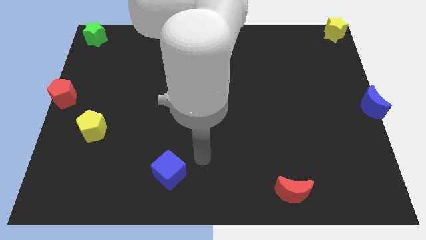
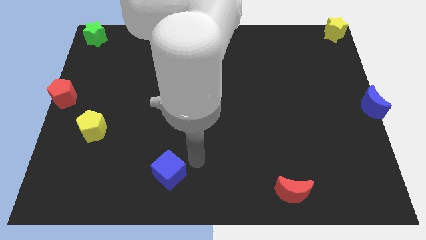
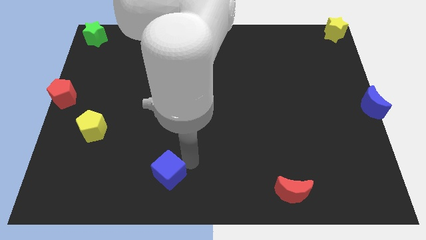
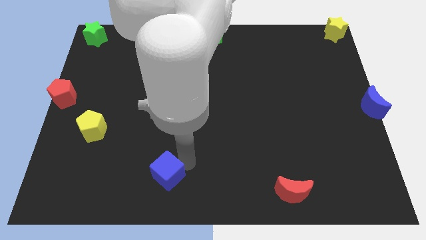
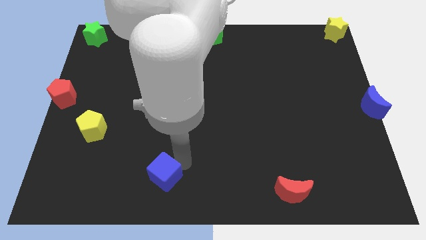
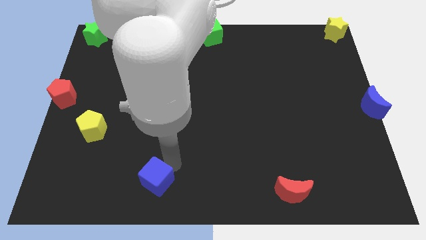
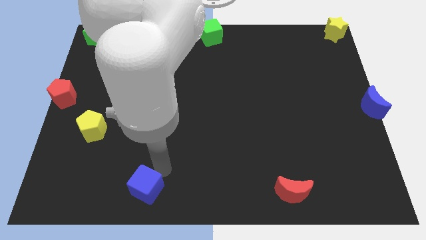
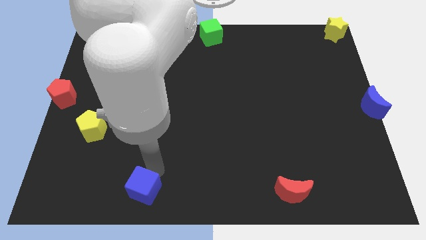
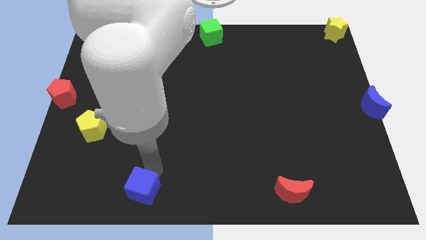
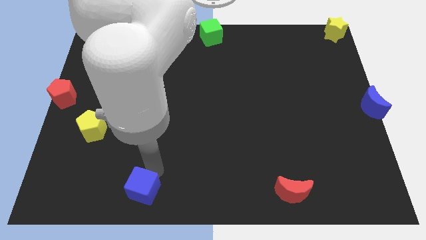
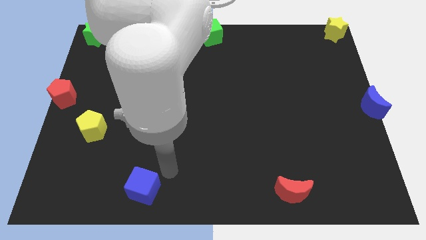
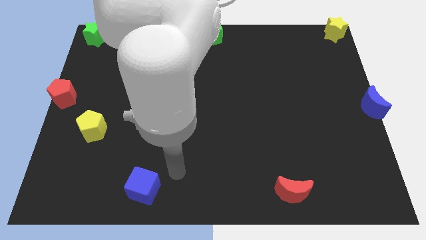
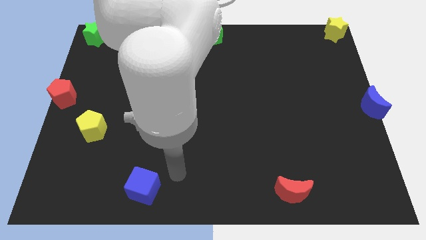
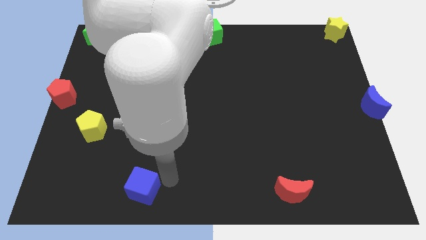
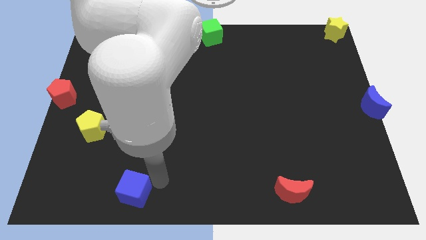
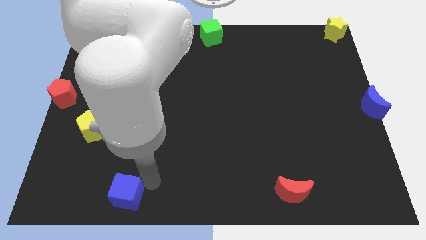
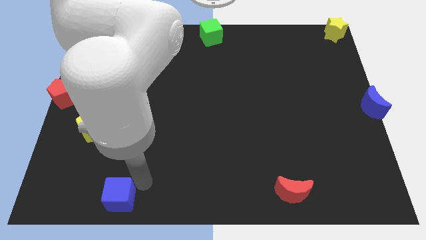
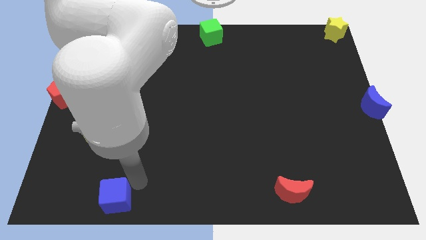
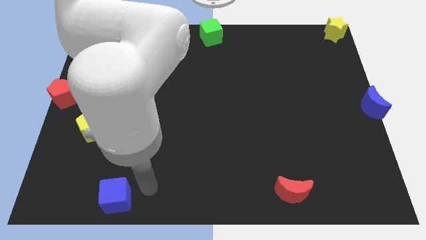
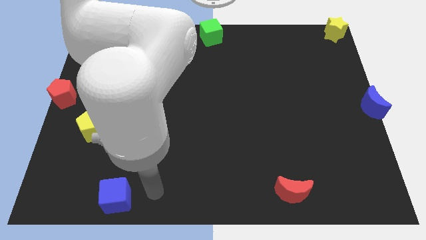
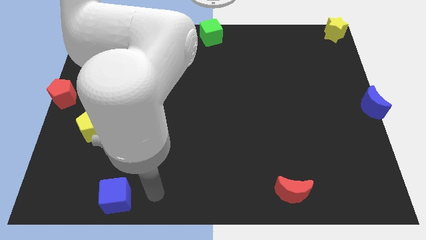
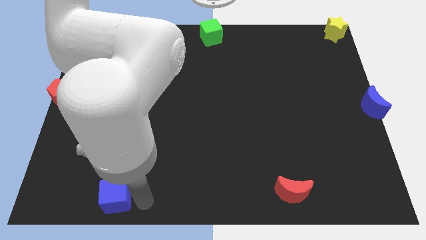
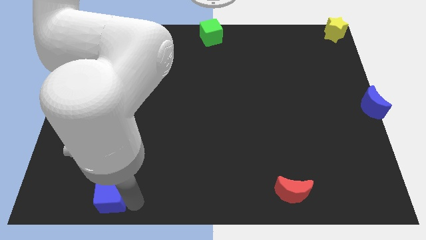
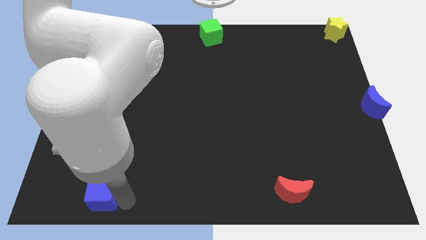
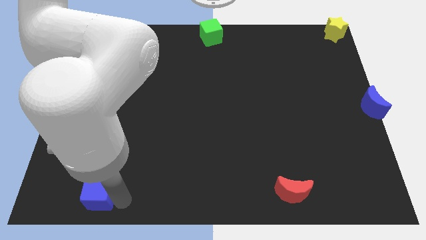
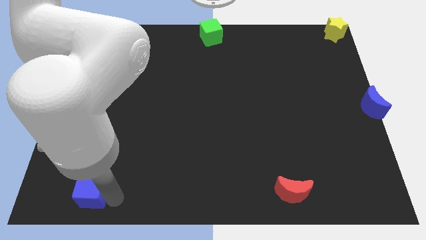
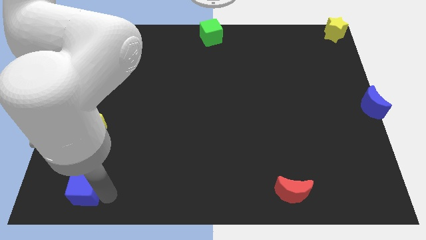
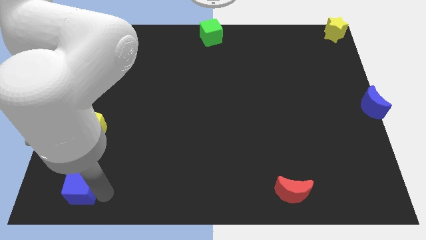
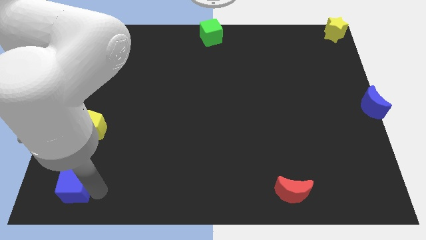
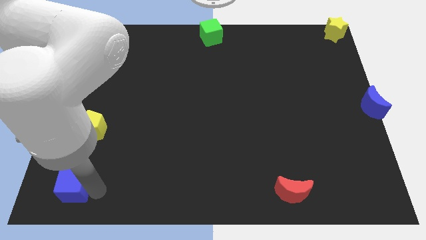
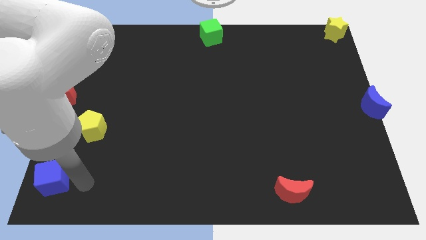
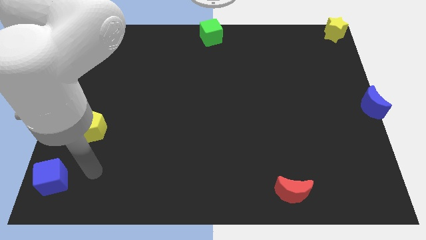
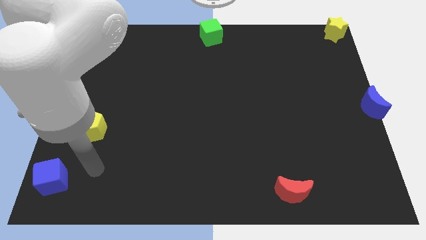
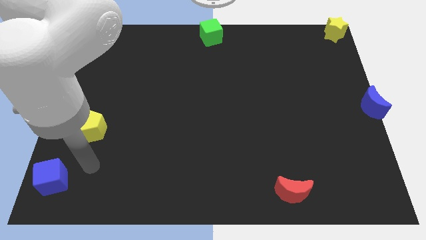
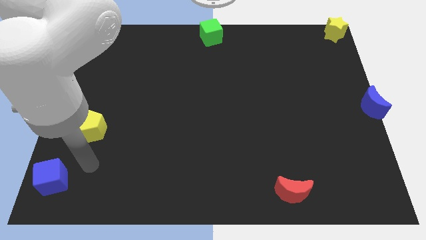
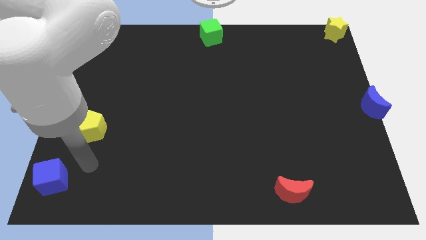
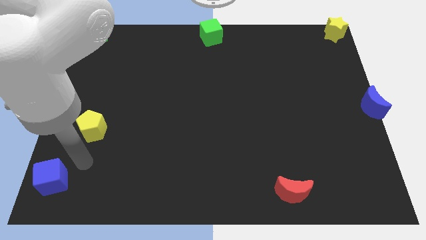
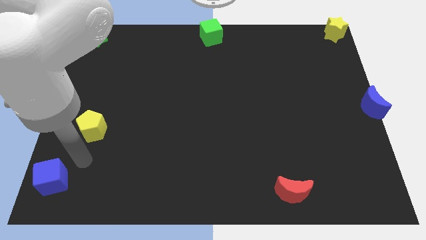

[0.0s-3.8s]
slide the blue cube diagonally bottom left to the yellow pentagon

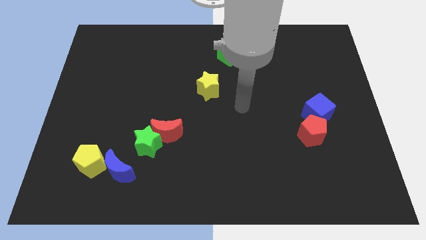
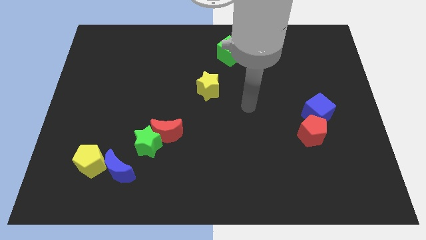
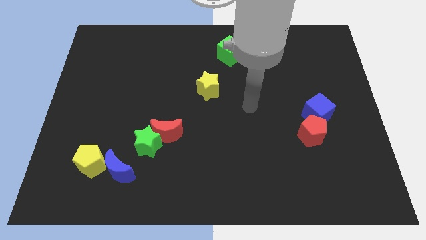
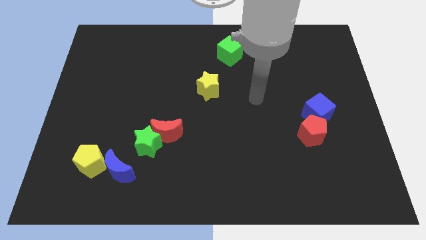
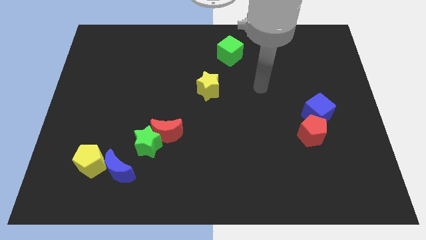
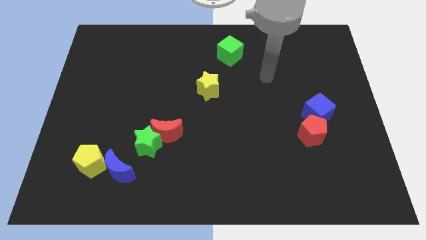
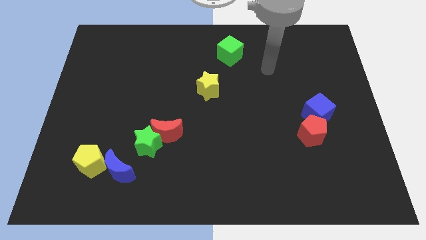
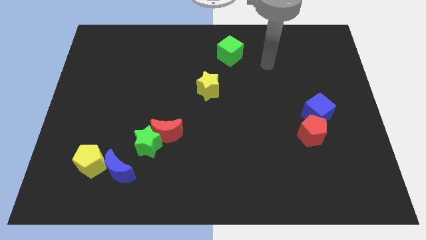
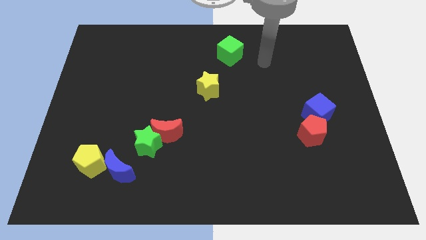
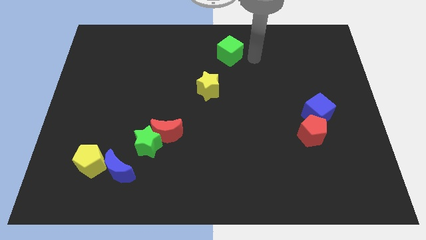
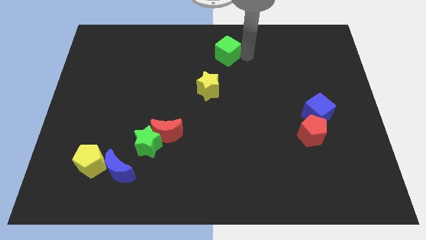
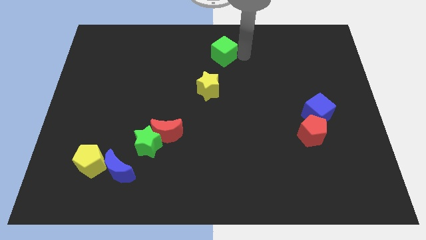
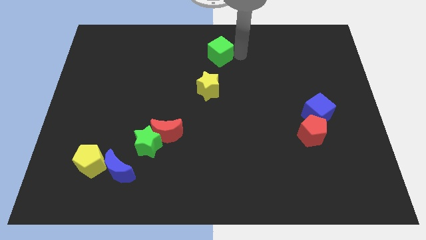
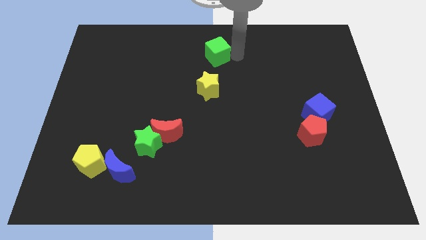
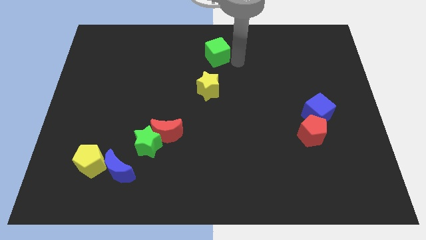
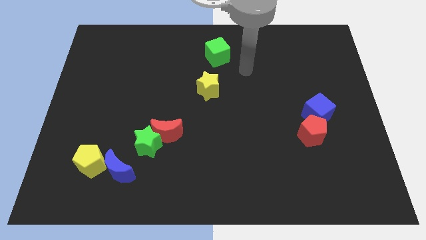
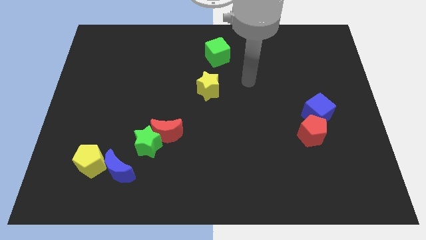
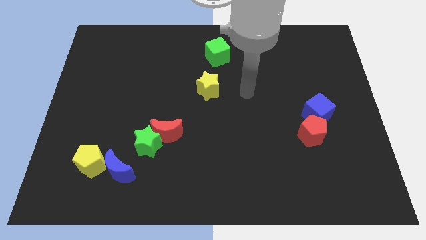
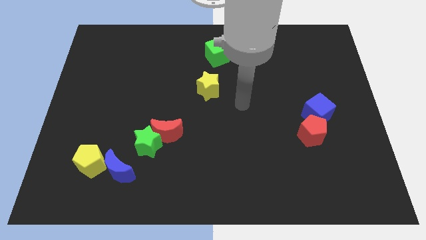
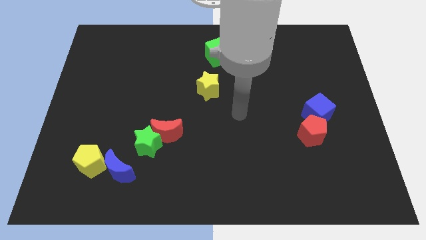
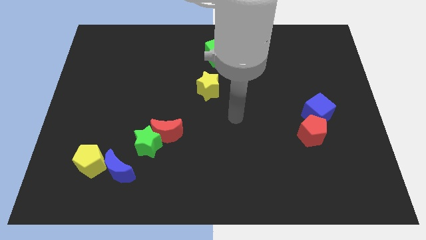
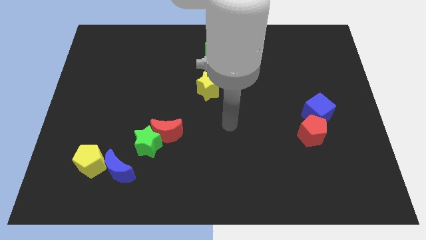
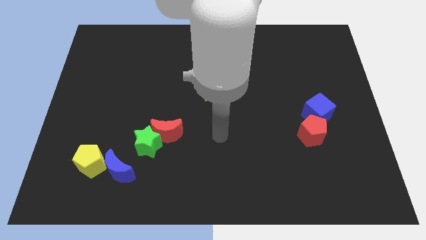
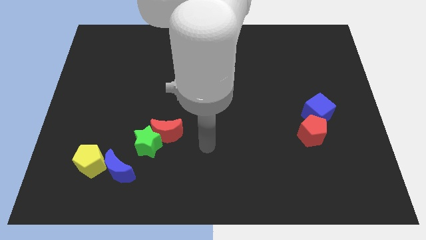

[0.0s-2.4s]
move the green cube above the yellow star

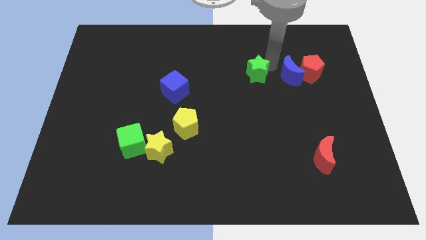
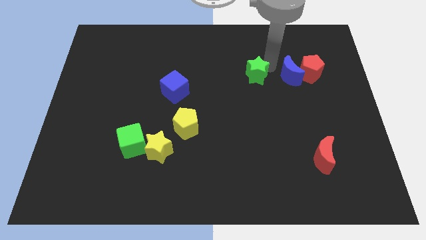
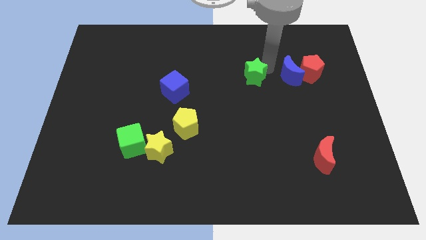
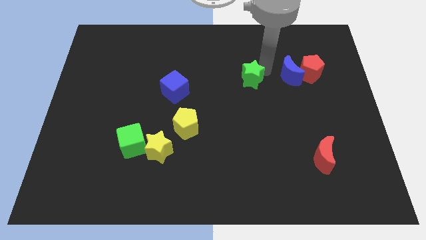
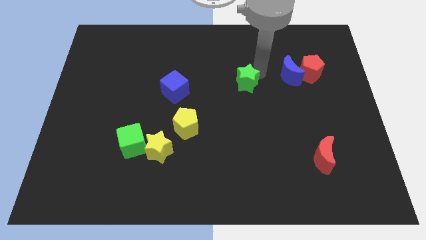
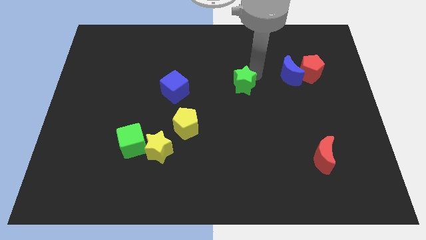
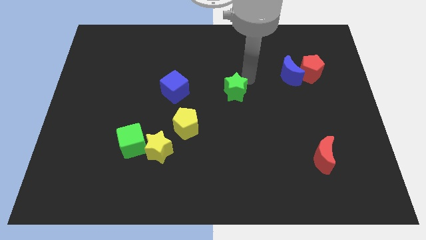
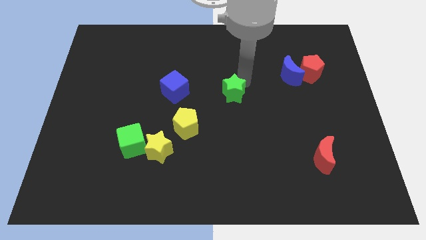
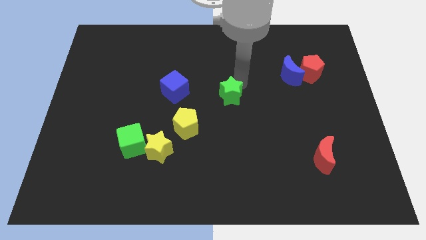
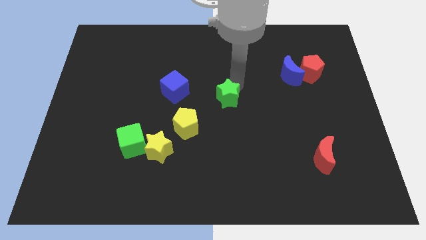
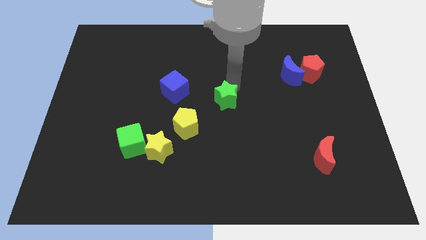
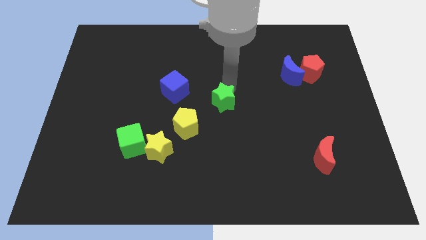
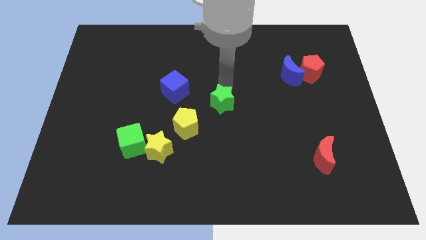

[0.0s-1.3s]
push the green star to center of the board

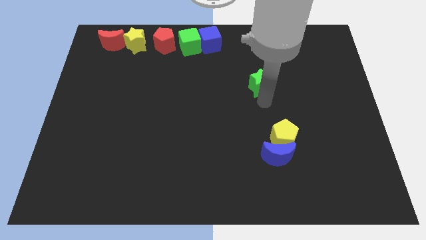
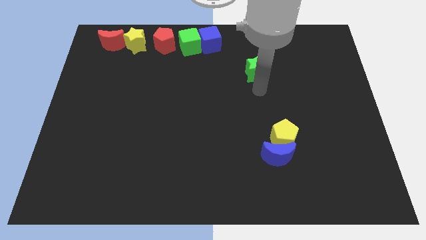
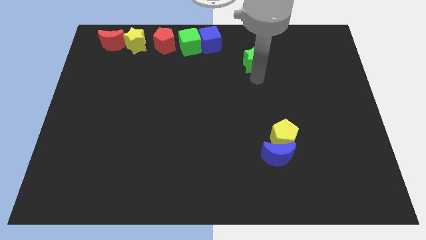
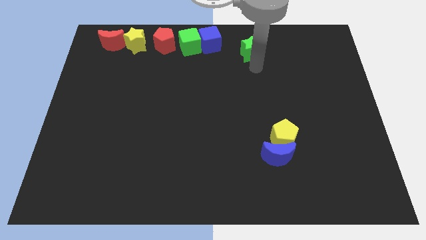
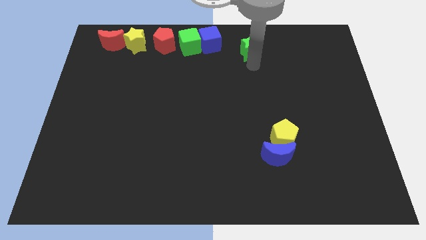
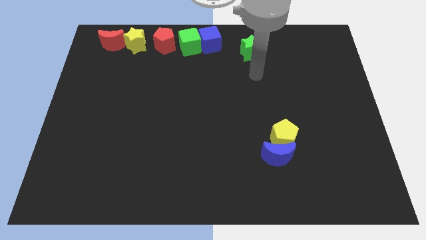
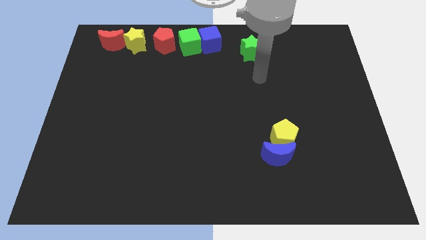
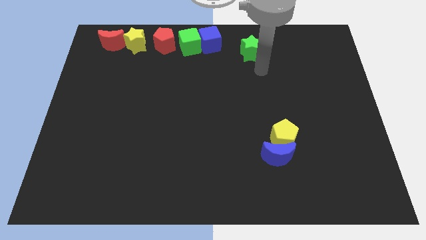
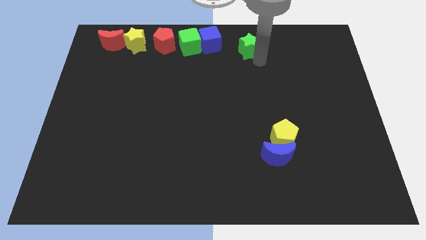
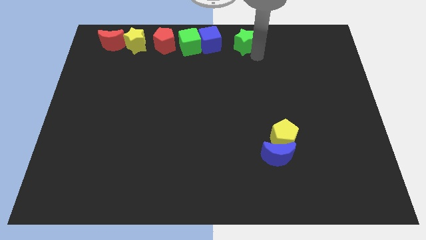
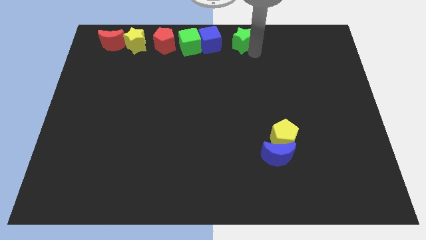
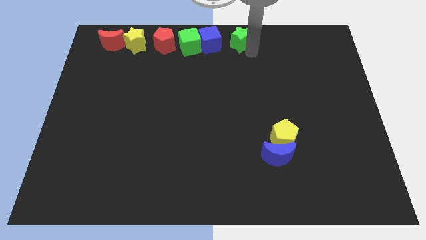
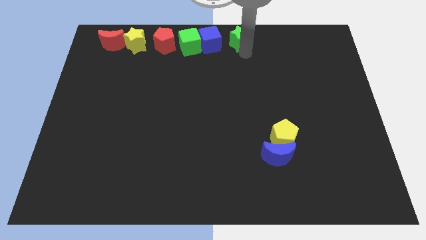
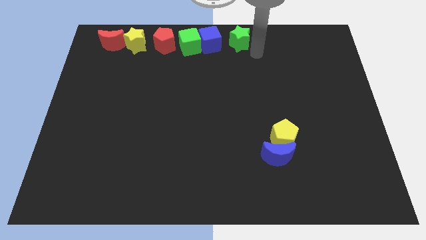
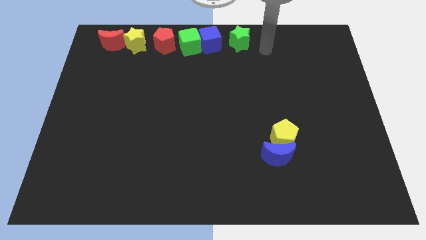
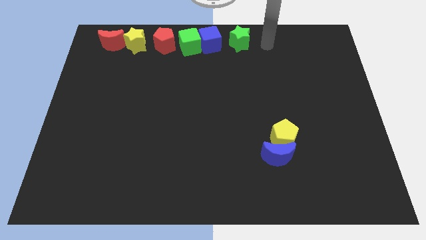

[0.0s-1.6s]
push the green star to the right of the blue cube
